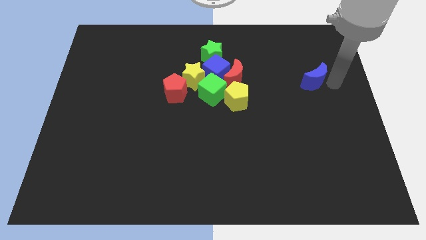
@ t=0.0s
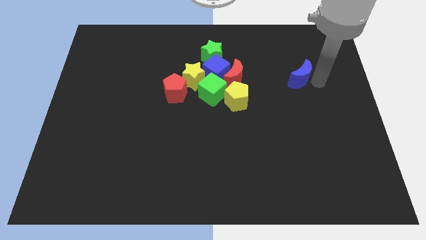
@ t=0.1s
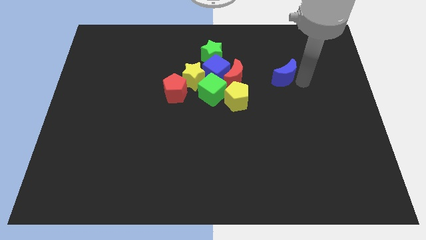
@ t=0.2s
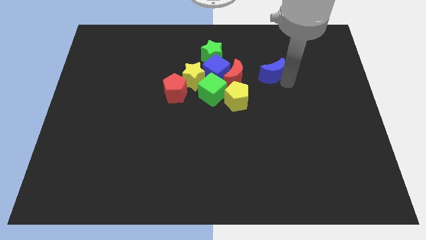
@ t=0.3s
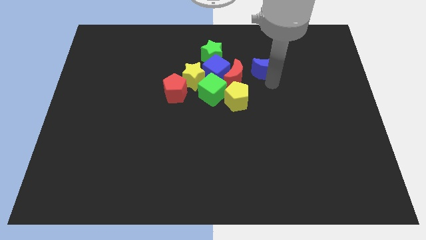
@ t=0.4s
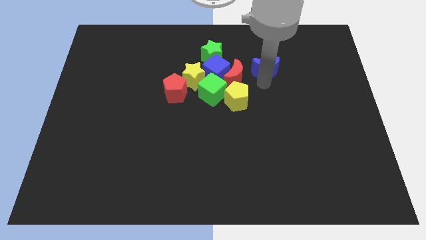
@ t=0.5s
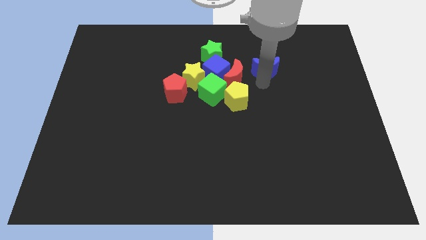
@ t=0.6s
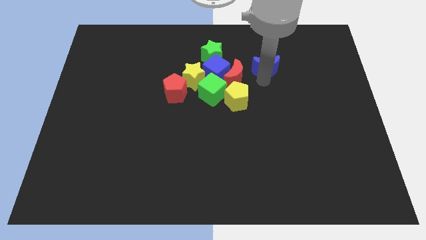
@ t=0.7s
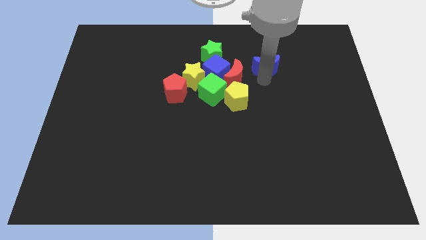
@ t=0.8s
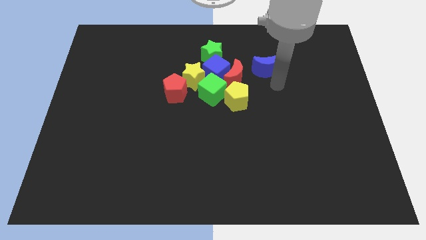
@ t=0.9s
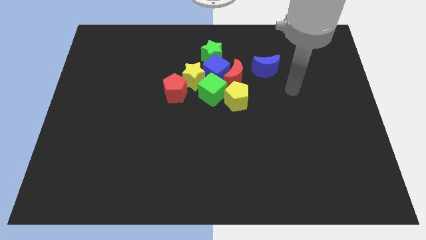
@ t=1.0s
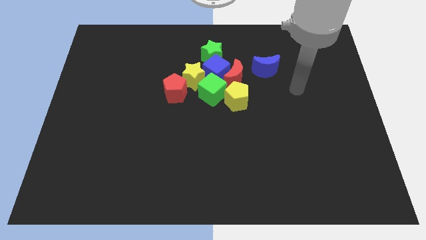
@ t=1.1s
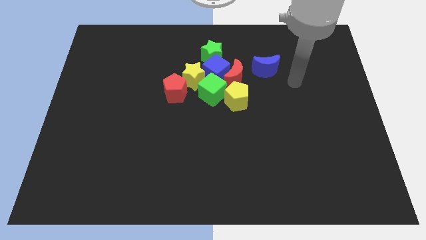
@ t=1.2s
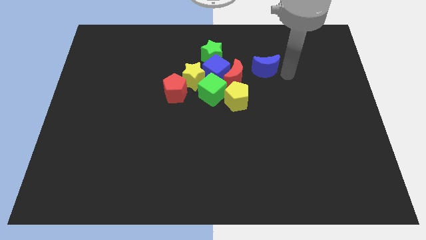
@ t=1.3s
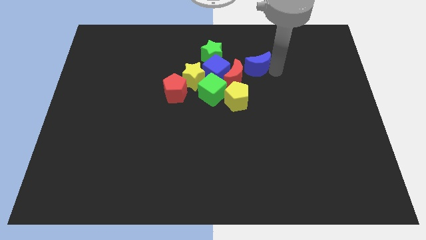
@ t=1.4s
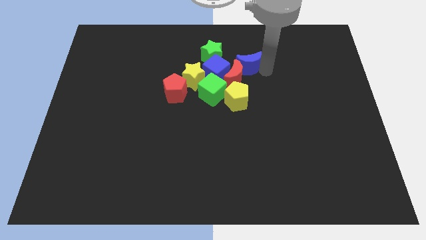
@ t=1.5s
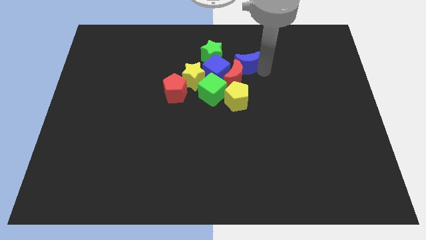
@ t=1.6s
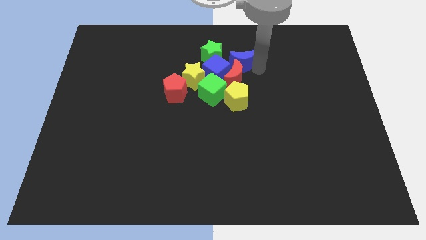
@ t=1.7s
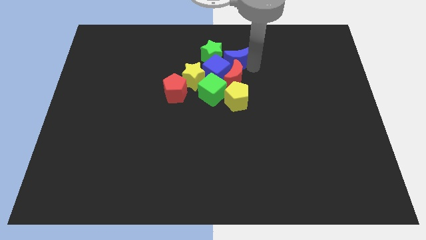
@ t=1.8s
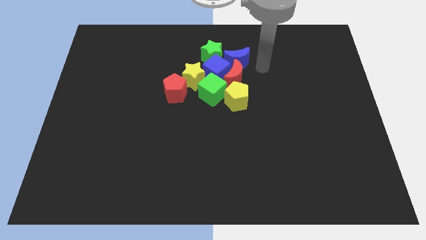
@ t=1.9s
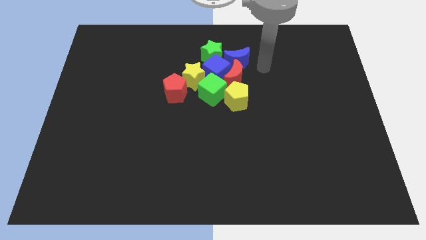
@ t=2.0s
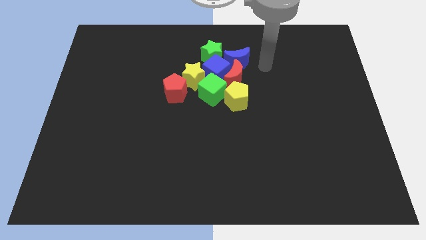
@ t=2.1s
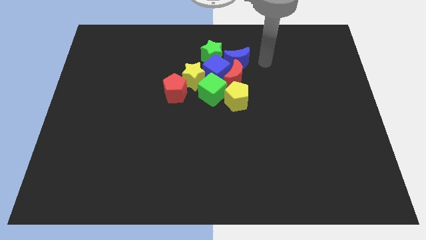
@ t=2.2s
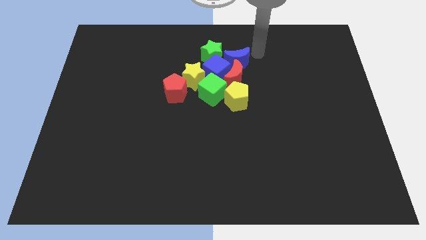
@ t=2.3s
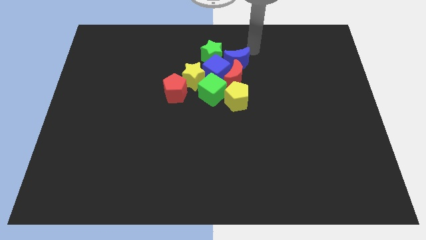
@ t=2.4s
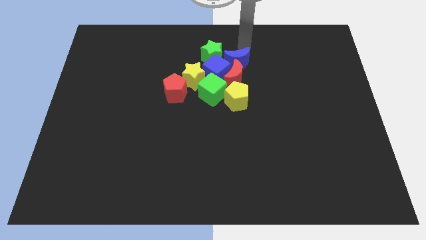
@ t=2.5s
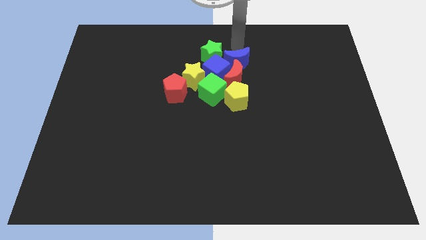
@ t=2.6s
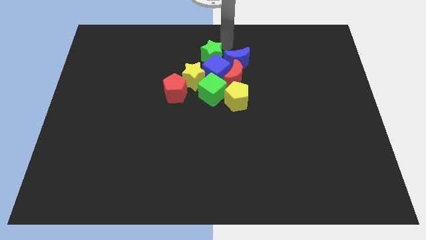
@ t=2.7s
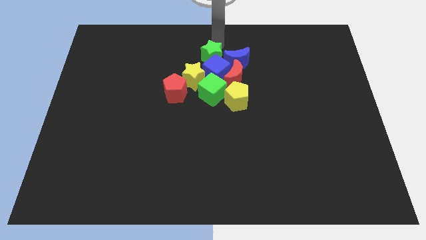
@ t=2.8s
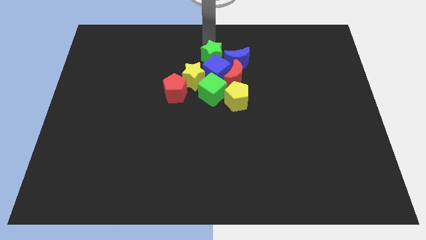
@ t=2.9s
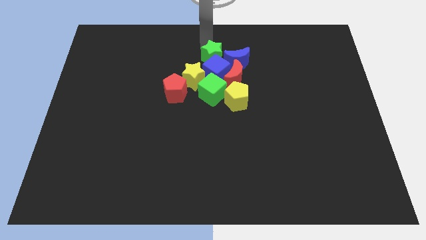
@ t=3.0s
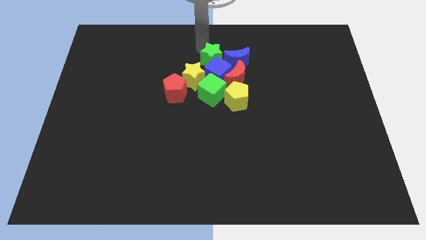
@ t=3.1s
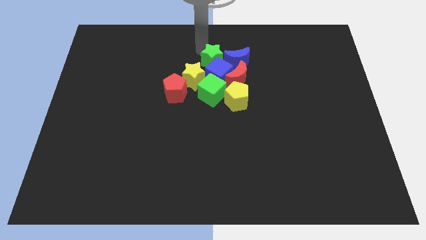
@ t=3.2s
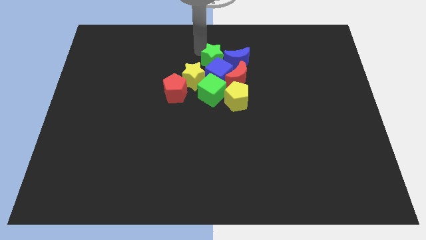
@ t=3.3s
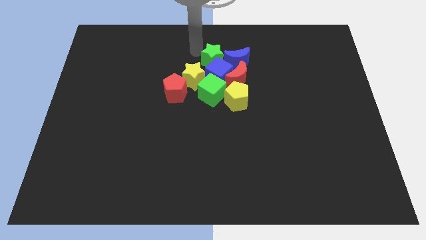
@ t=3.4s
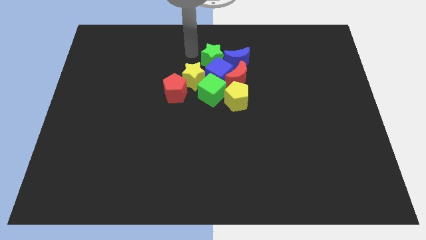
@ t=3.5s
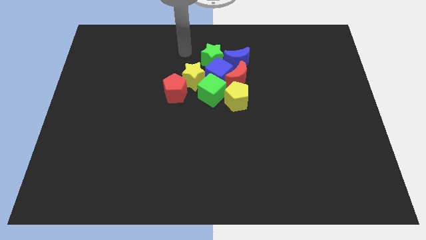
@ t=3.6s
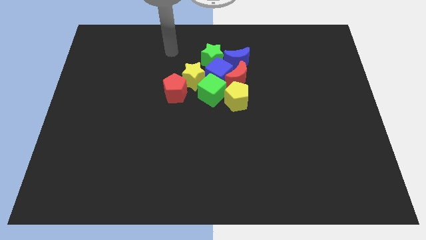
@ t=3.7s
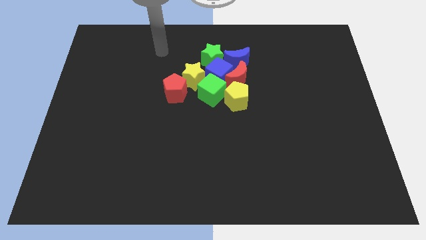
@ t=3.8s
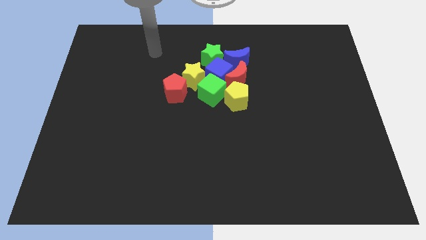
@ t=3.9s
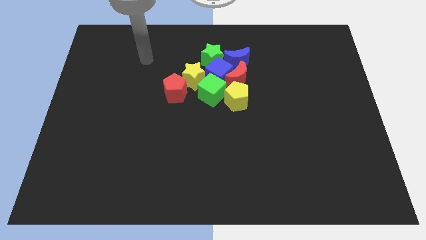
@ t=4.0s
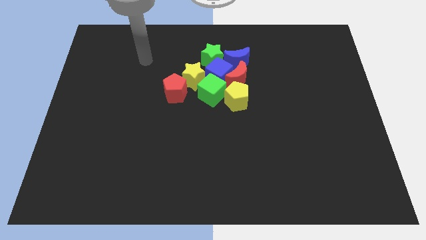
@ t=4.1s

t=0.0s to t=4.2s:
move the blue crescent close to the group of blocks

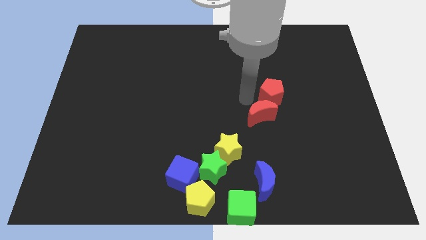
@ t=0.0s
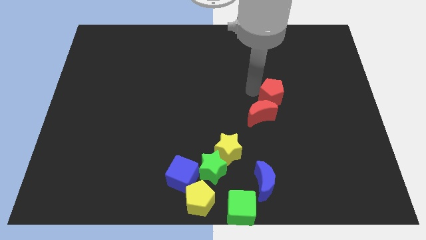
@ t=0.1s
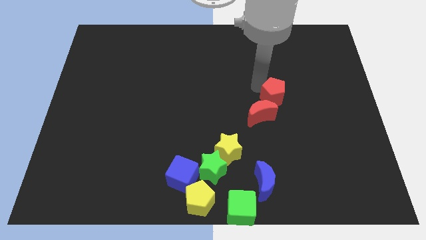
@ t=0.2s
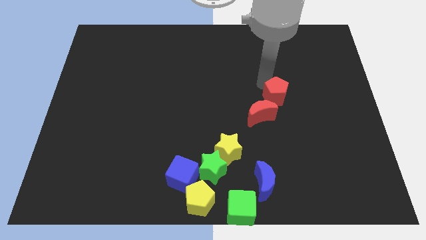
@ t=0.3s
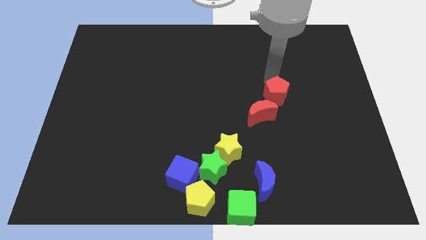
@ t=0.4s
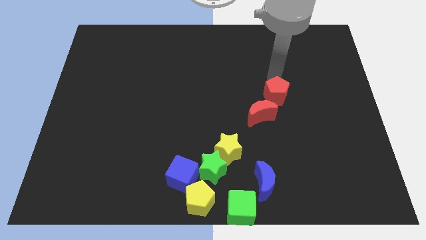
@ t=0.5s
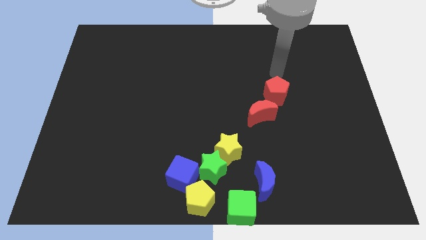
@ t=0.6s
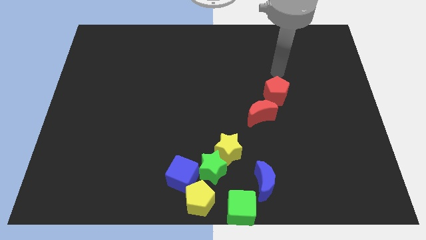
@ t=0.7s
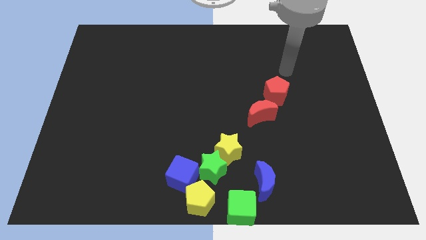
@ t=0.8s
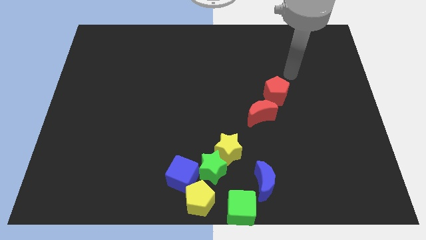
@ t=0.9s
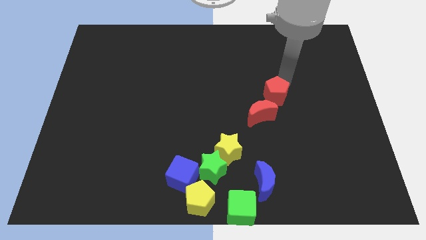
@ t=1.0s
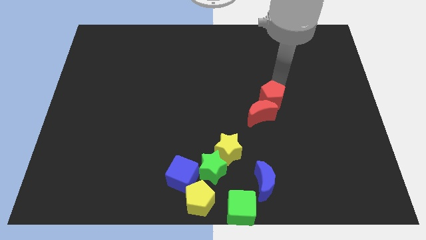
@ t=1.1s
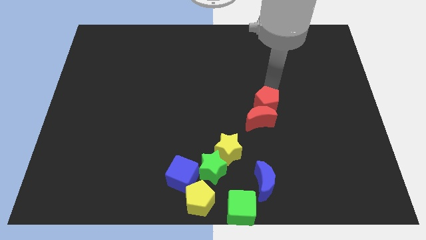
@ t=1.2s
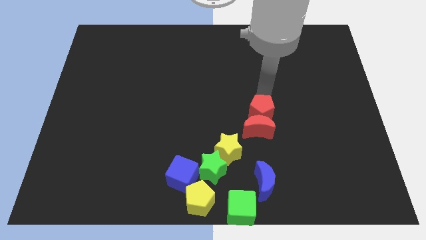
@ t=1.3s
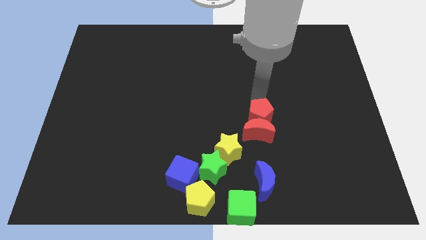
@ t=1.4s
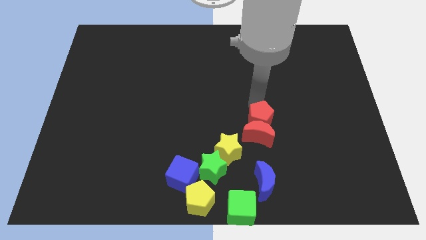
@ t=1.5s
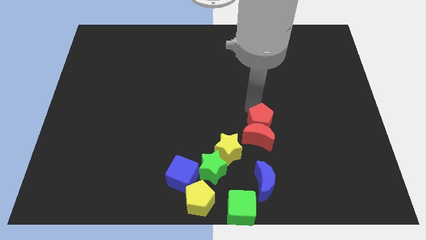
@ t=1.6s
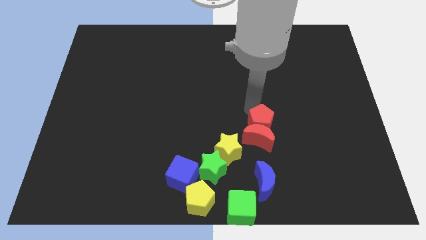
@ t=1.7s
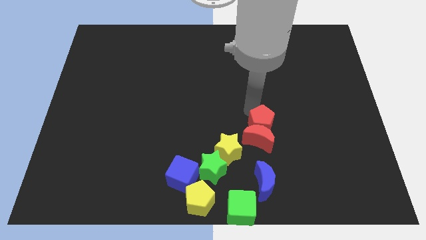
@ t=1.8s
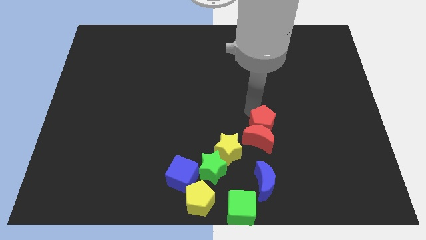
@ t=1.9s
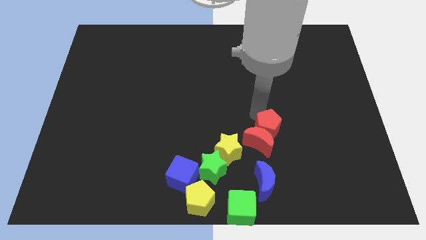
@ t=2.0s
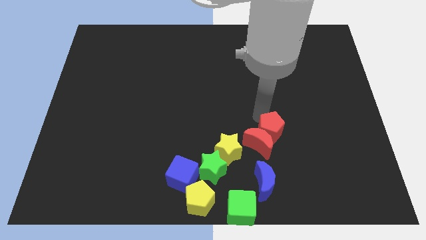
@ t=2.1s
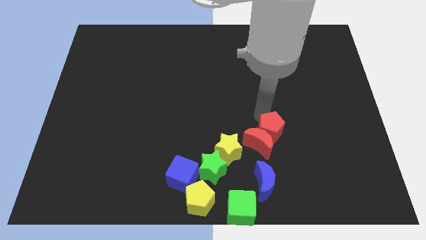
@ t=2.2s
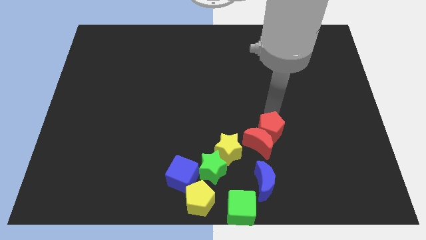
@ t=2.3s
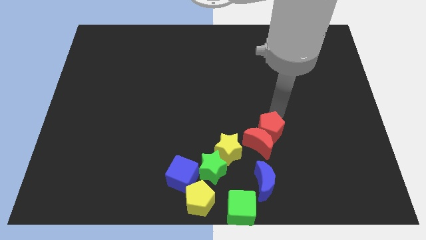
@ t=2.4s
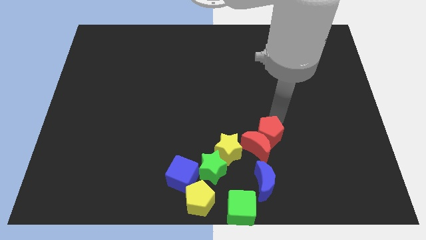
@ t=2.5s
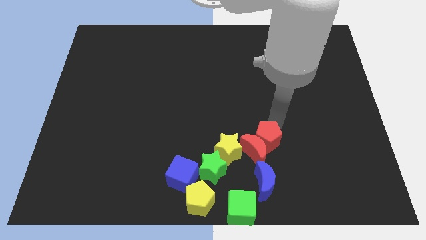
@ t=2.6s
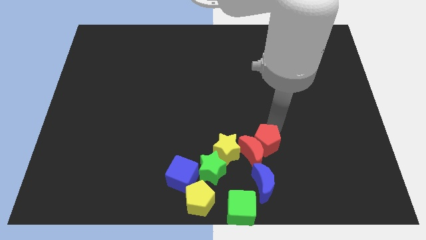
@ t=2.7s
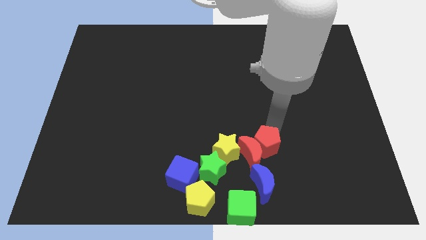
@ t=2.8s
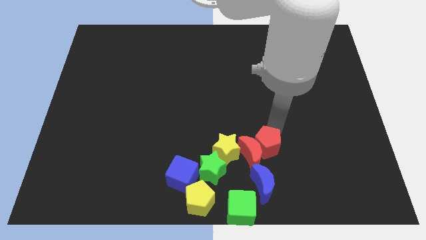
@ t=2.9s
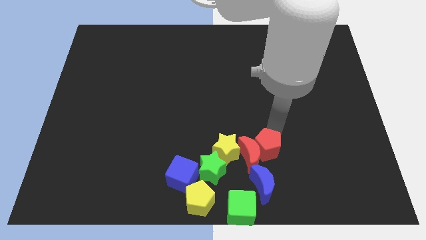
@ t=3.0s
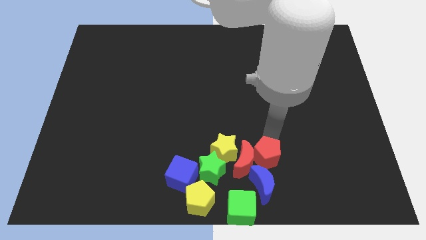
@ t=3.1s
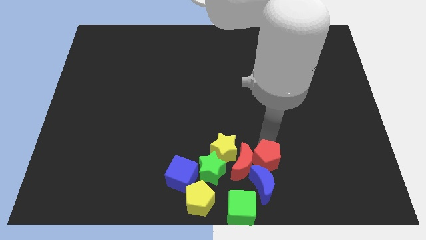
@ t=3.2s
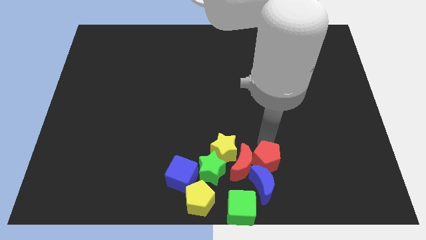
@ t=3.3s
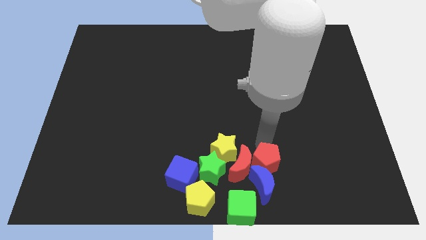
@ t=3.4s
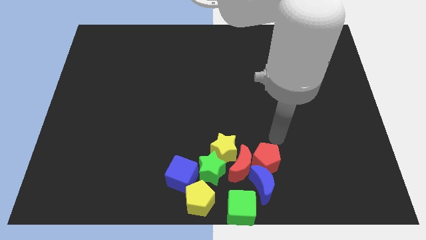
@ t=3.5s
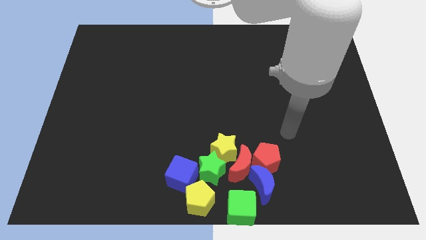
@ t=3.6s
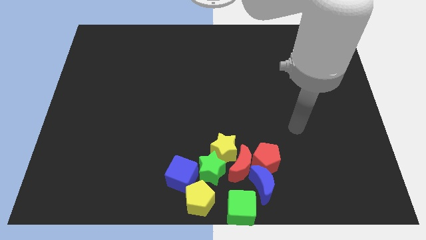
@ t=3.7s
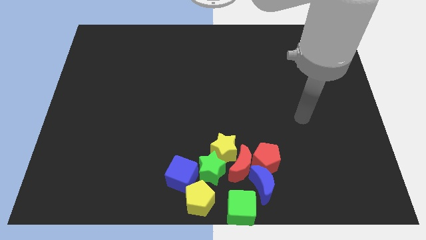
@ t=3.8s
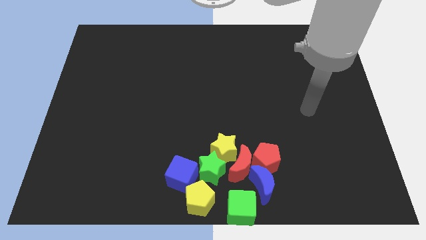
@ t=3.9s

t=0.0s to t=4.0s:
push a group of blocks to the bottom center of the board

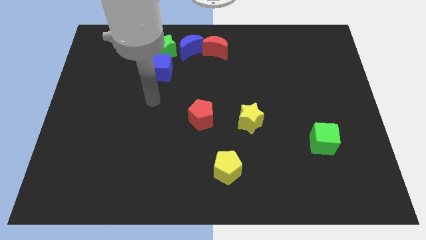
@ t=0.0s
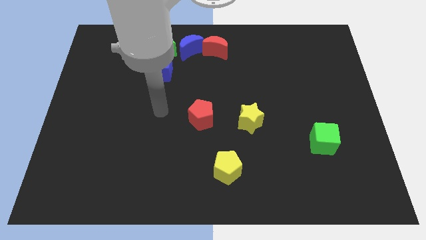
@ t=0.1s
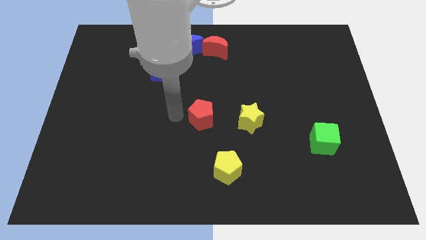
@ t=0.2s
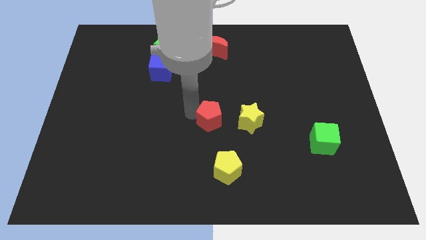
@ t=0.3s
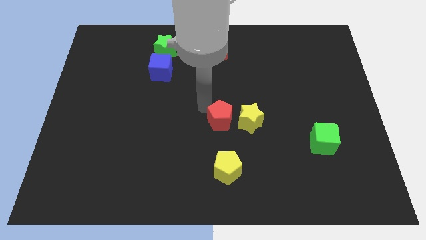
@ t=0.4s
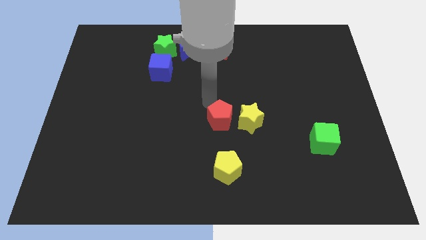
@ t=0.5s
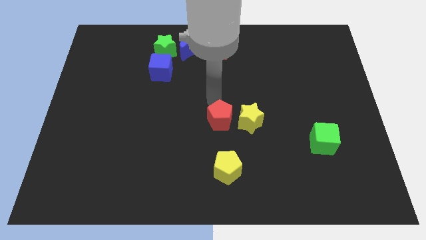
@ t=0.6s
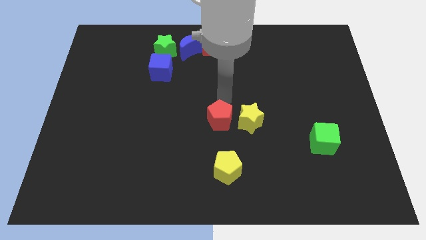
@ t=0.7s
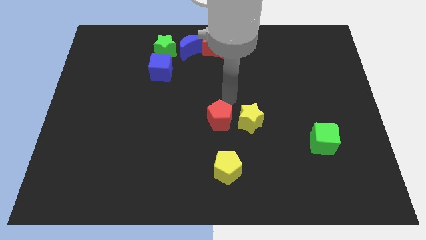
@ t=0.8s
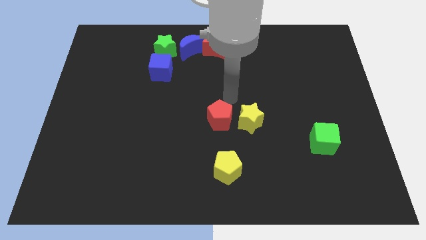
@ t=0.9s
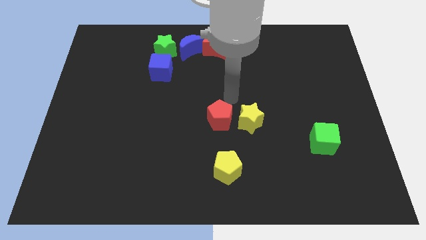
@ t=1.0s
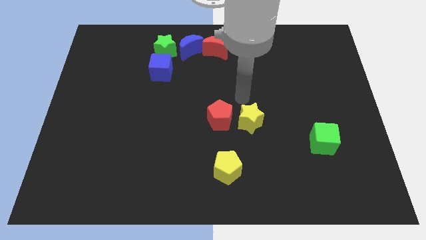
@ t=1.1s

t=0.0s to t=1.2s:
slide the red pentagon slightly towards the yellow star
